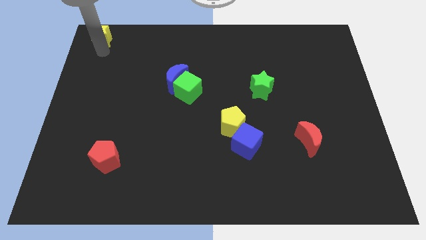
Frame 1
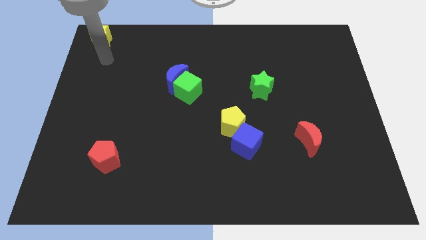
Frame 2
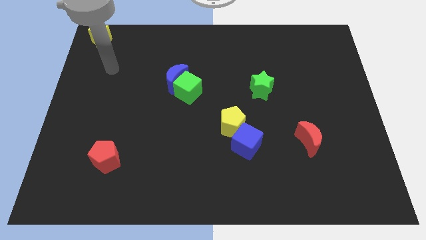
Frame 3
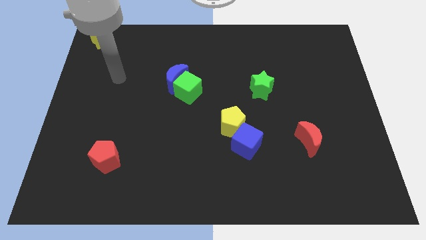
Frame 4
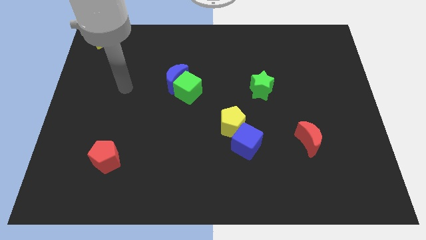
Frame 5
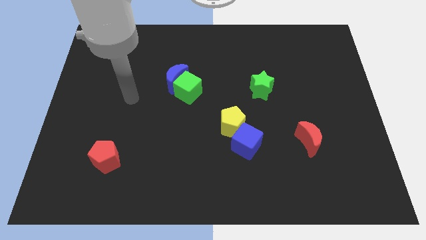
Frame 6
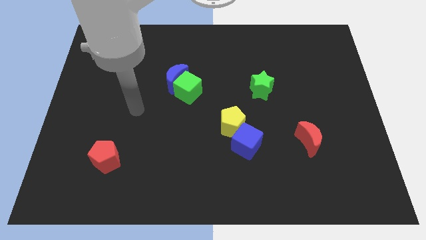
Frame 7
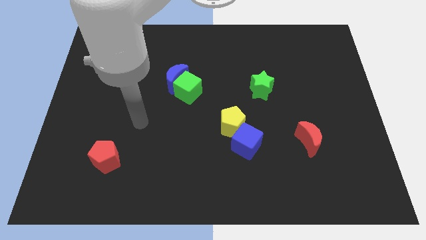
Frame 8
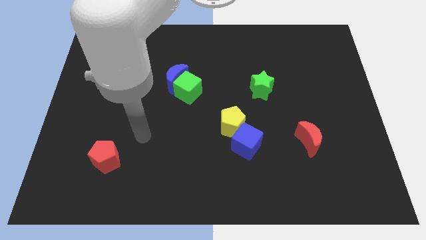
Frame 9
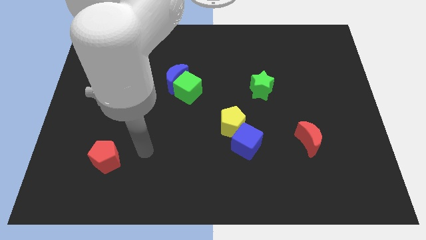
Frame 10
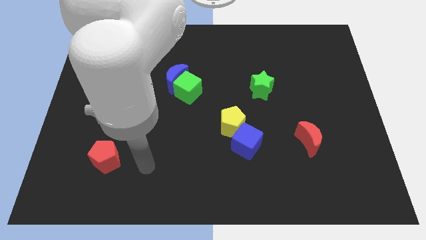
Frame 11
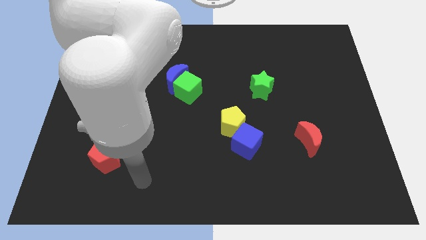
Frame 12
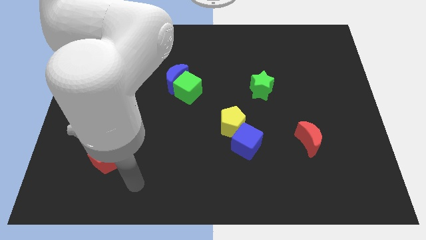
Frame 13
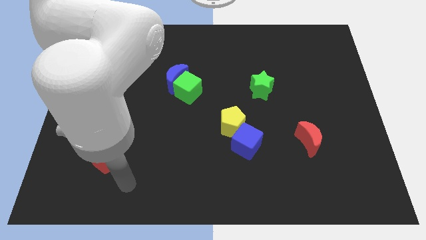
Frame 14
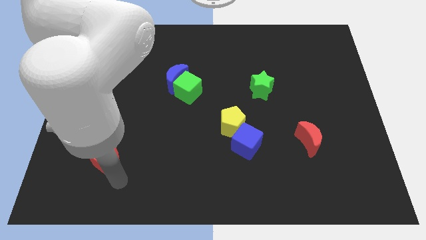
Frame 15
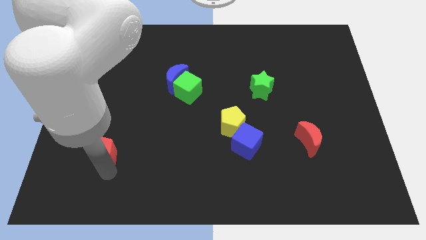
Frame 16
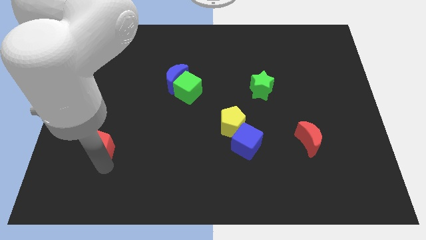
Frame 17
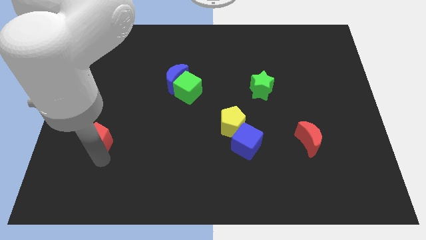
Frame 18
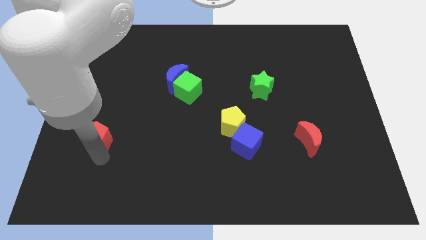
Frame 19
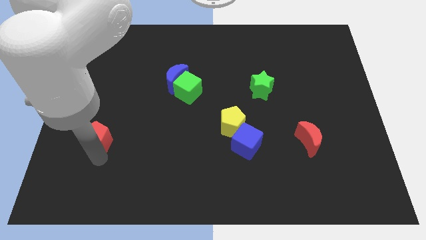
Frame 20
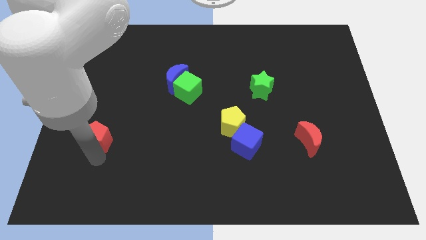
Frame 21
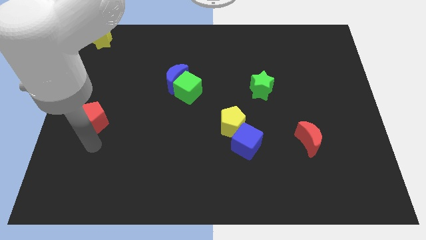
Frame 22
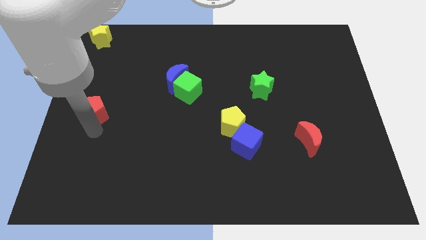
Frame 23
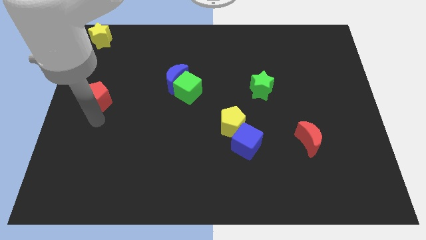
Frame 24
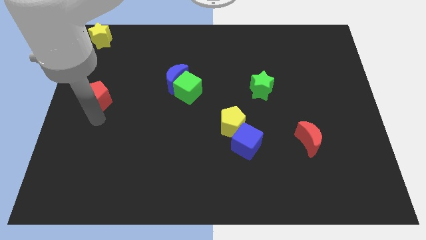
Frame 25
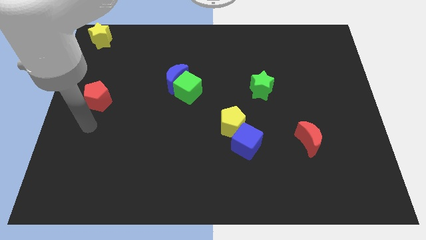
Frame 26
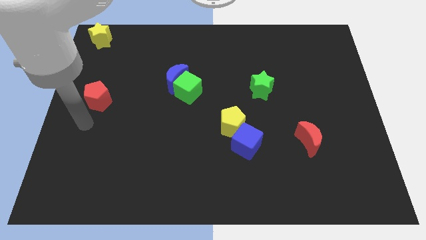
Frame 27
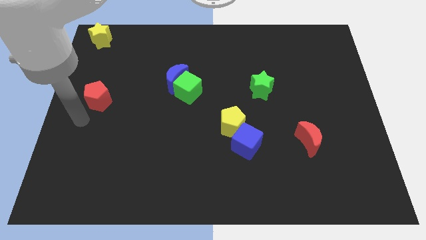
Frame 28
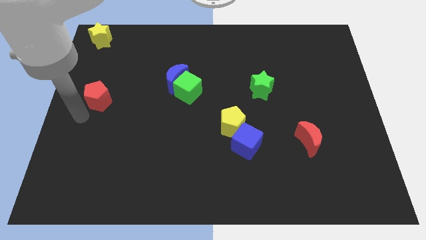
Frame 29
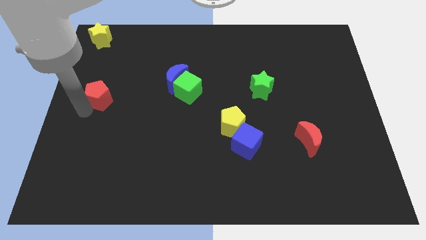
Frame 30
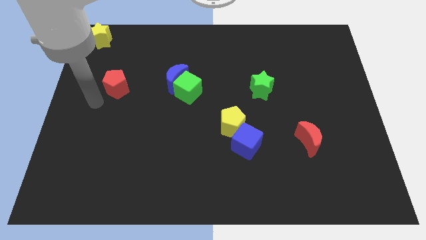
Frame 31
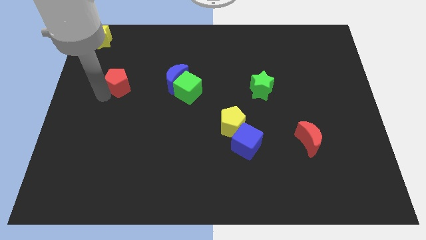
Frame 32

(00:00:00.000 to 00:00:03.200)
move the red pentagon parallel left to the green cube

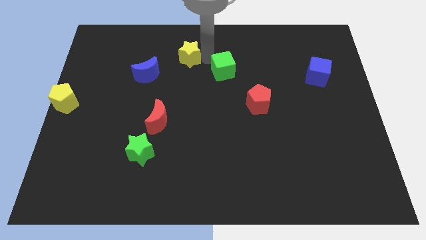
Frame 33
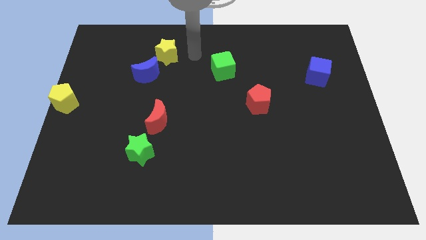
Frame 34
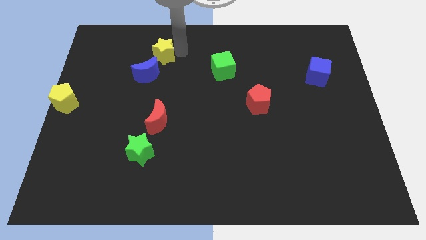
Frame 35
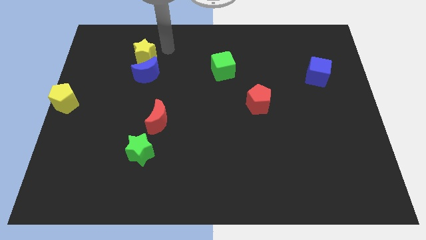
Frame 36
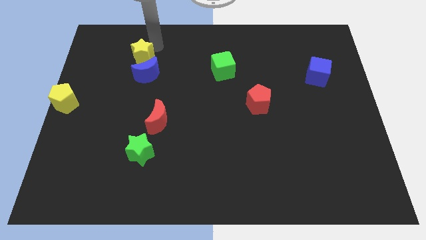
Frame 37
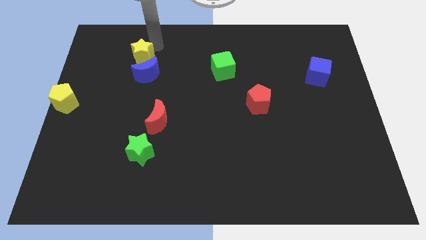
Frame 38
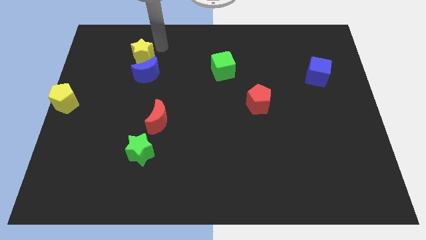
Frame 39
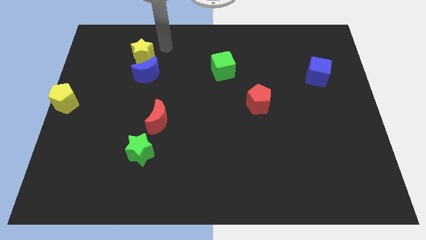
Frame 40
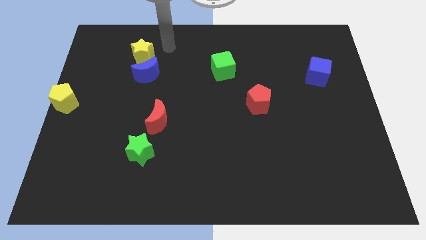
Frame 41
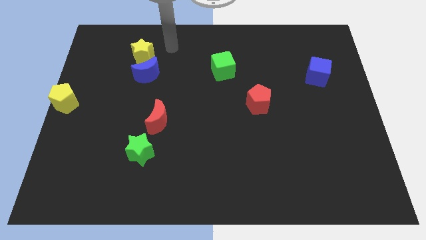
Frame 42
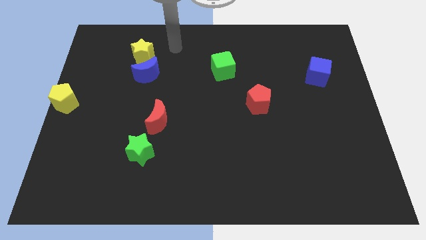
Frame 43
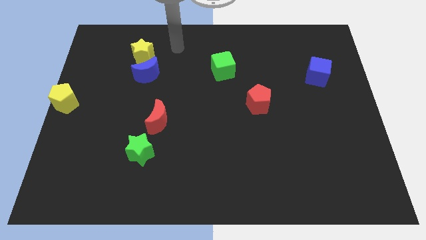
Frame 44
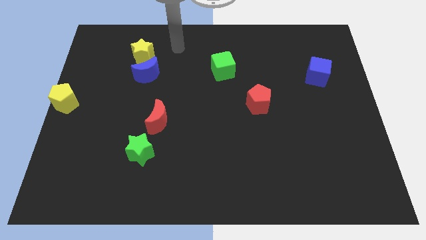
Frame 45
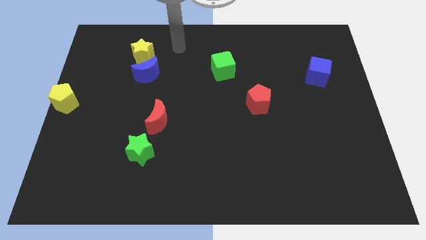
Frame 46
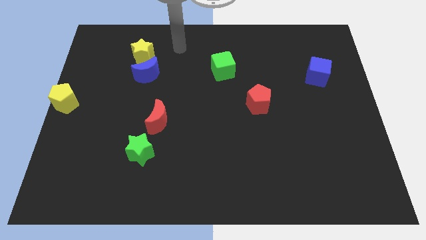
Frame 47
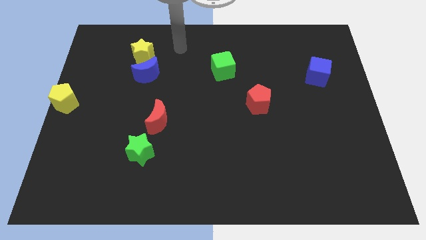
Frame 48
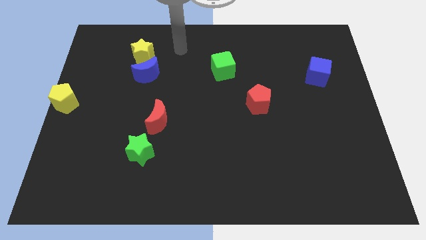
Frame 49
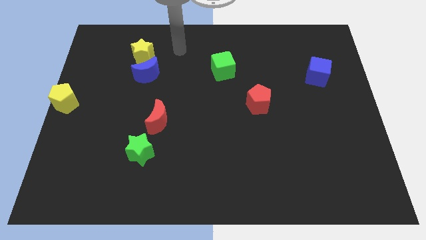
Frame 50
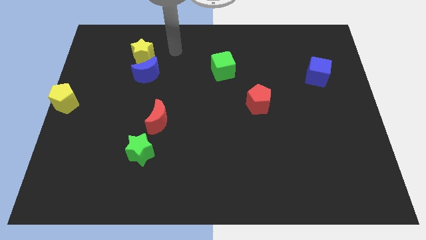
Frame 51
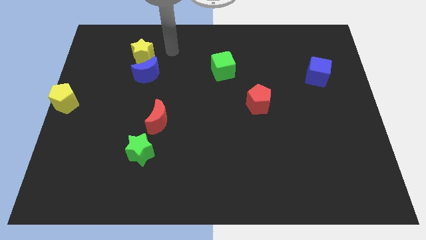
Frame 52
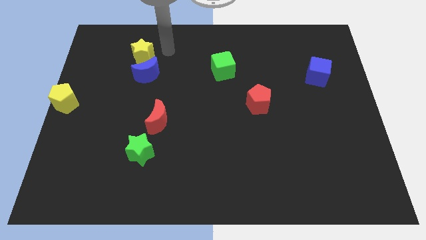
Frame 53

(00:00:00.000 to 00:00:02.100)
drag the yellow star vertically above the blue moon

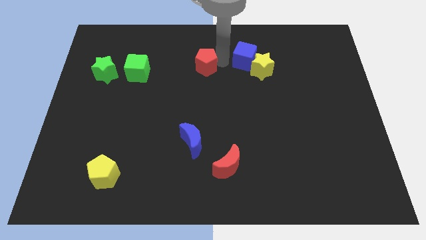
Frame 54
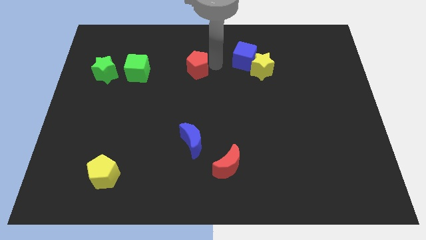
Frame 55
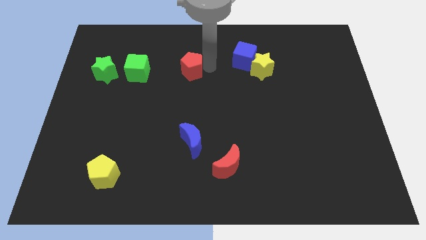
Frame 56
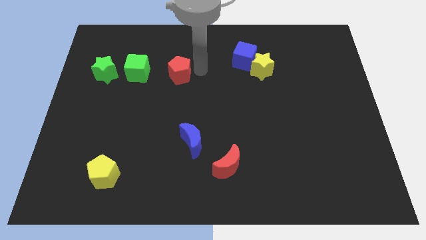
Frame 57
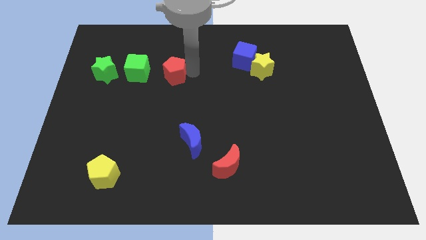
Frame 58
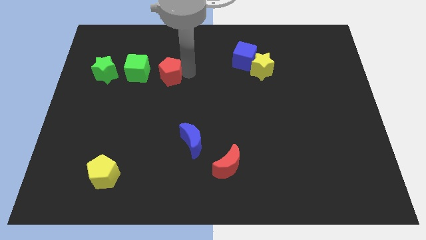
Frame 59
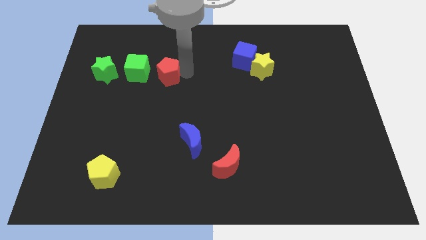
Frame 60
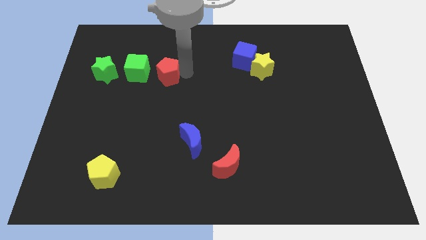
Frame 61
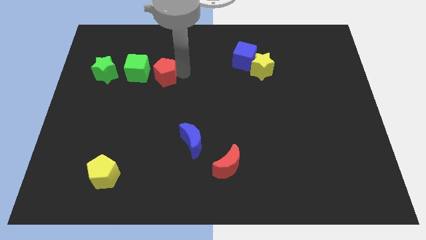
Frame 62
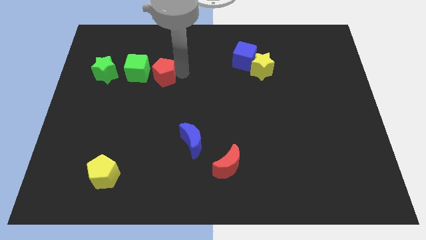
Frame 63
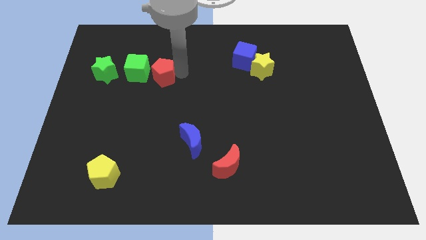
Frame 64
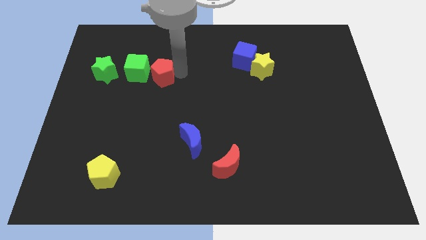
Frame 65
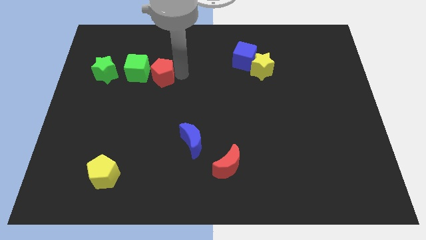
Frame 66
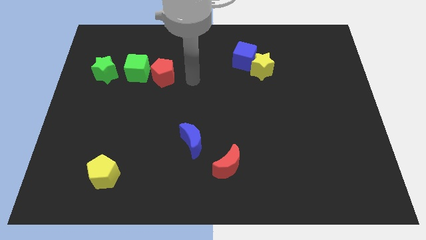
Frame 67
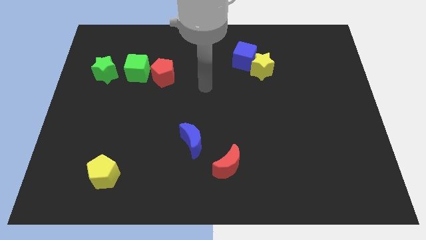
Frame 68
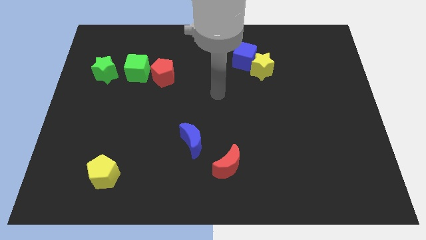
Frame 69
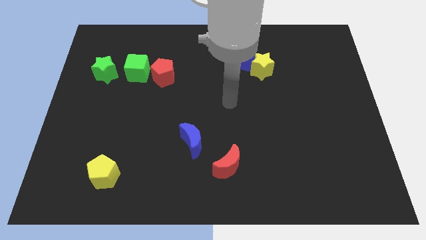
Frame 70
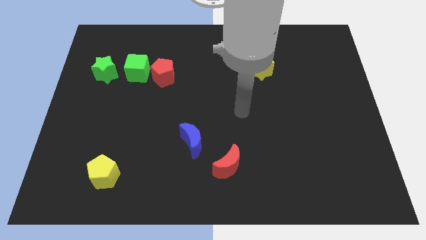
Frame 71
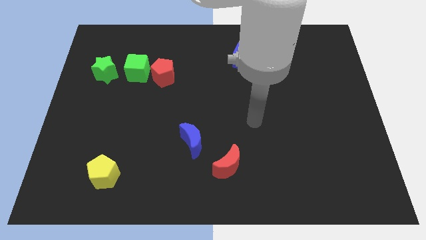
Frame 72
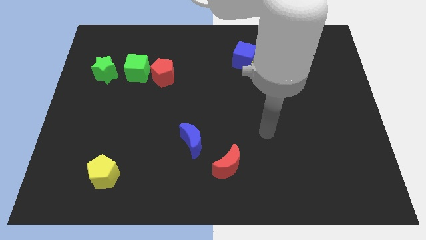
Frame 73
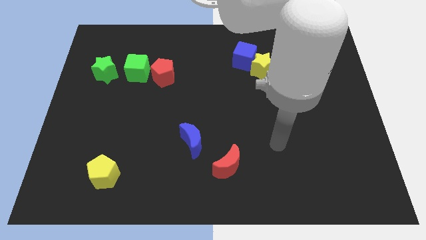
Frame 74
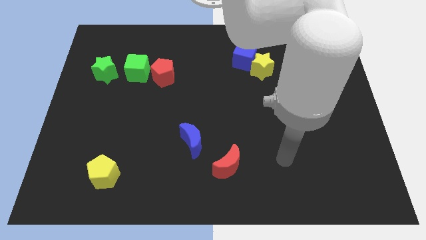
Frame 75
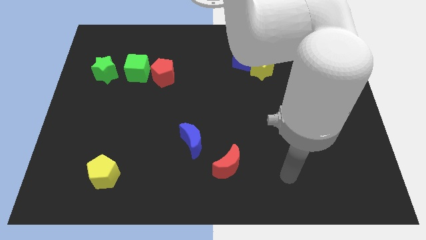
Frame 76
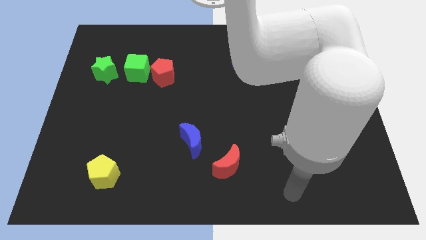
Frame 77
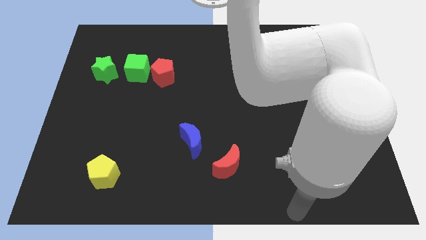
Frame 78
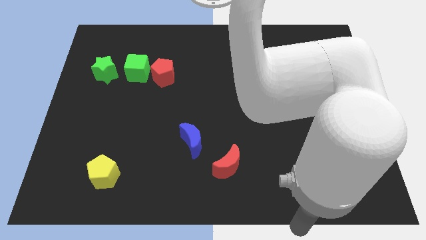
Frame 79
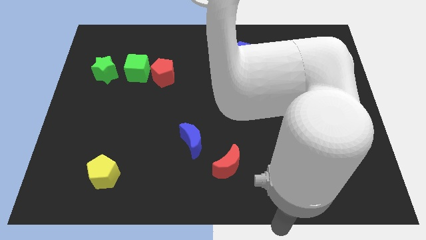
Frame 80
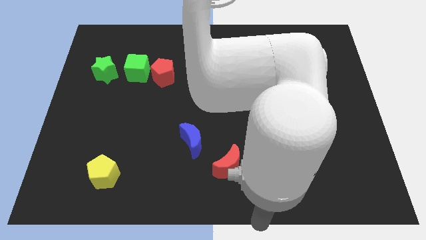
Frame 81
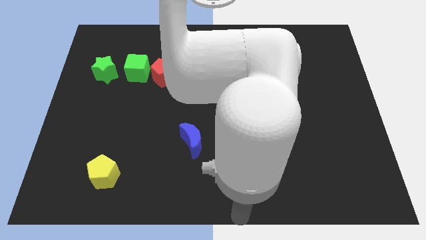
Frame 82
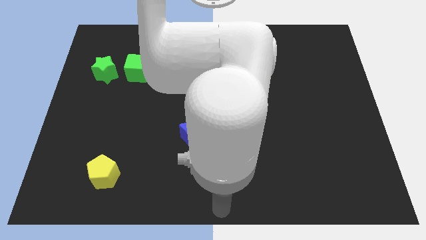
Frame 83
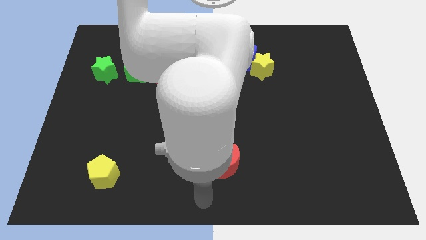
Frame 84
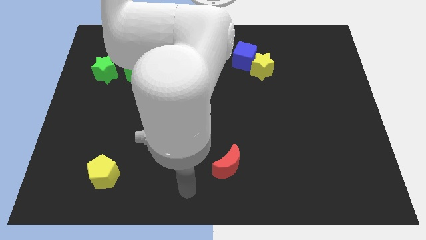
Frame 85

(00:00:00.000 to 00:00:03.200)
move the red pentagon to the right side of the green cube

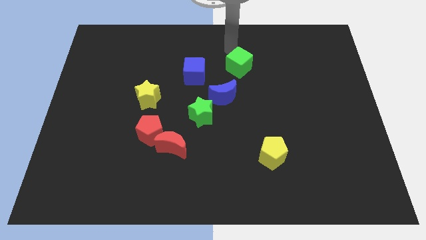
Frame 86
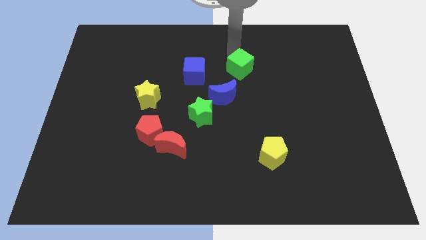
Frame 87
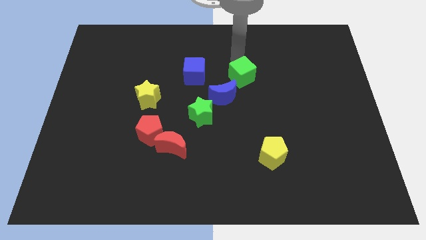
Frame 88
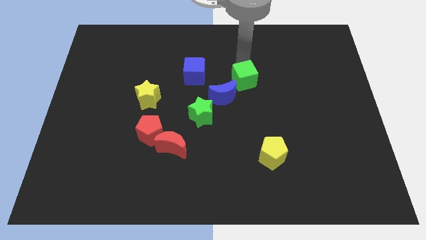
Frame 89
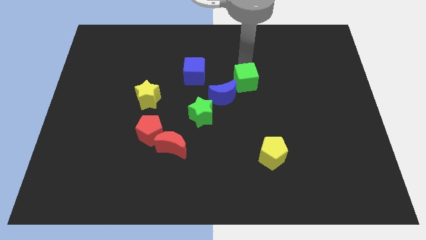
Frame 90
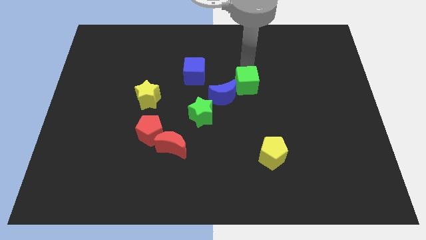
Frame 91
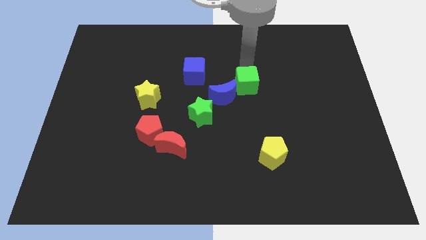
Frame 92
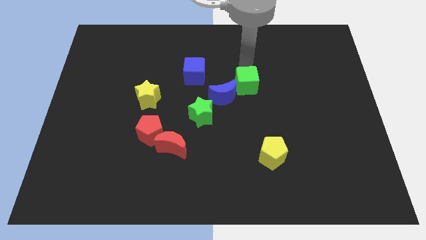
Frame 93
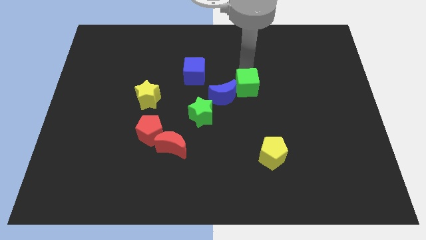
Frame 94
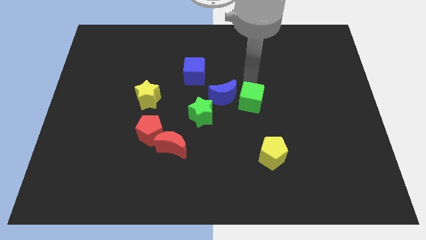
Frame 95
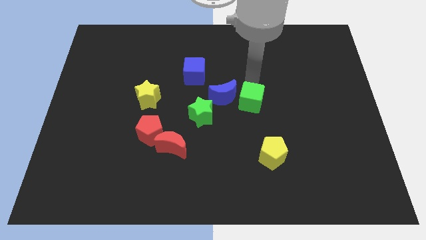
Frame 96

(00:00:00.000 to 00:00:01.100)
move the green cube to the right of the blue crescent
